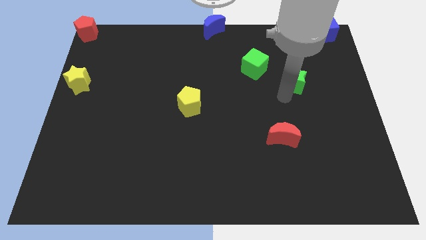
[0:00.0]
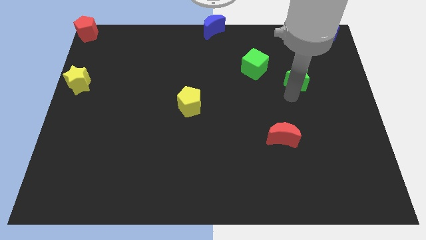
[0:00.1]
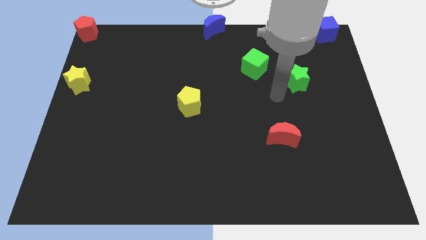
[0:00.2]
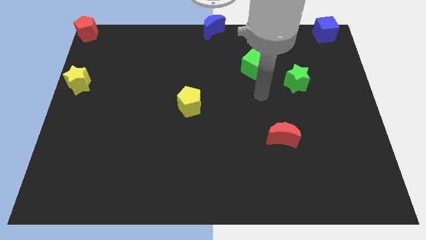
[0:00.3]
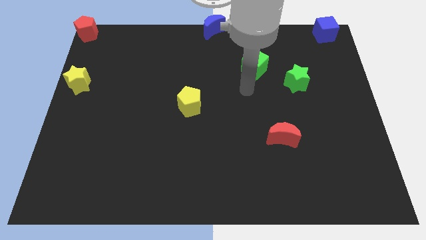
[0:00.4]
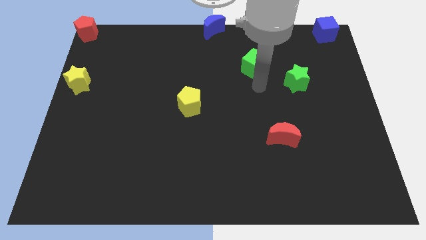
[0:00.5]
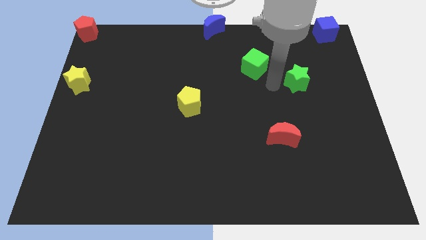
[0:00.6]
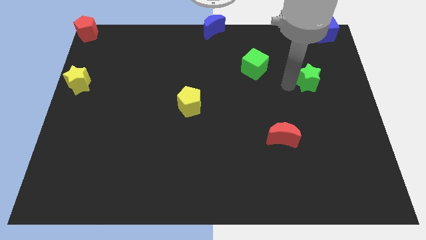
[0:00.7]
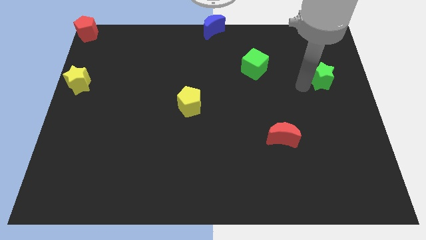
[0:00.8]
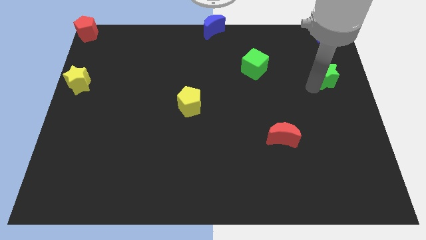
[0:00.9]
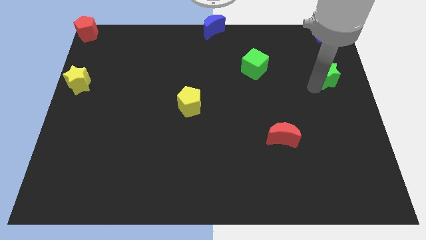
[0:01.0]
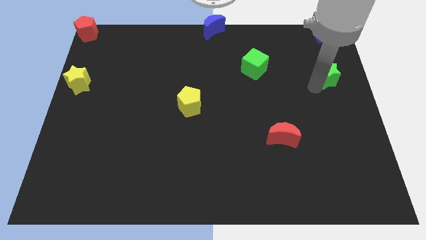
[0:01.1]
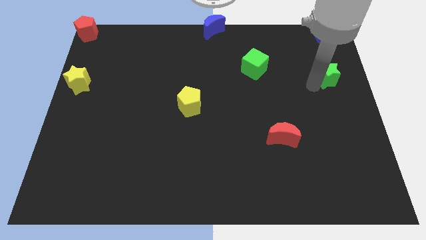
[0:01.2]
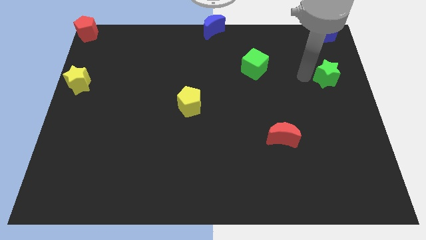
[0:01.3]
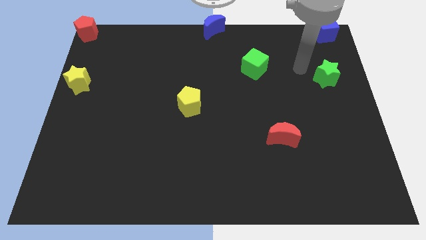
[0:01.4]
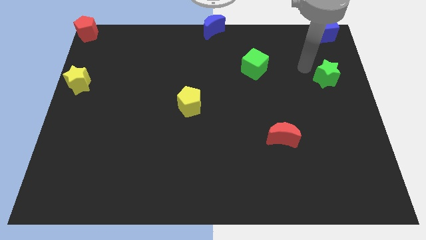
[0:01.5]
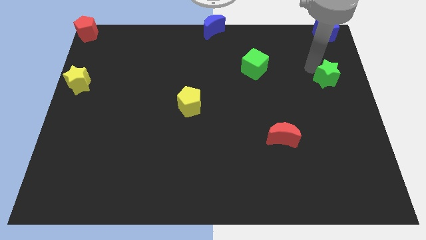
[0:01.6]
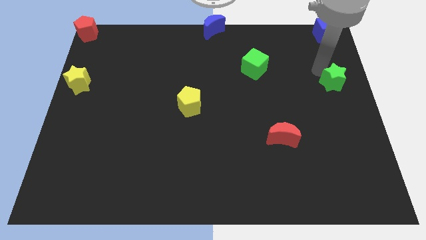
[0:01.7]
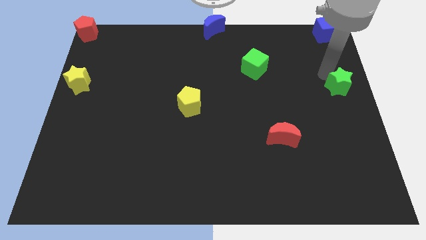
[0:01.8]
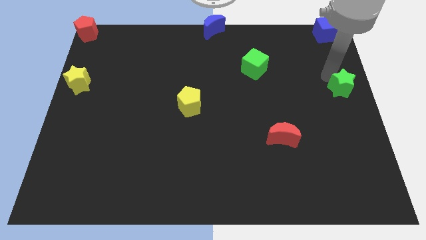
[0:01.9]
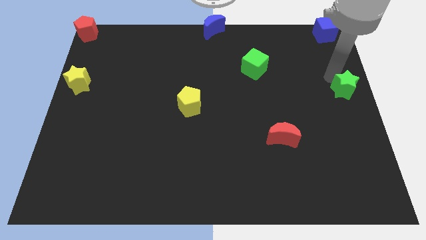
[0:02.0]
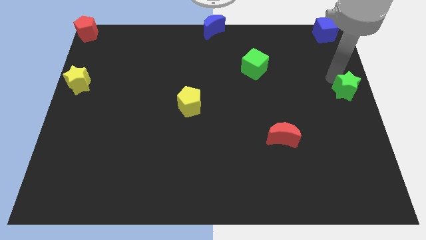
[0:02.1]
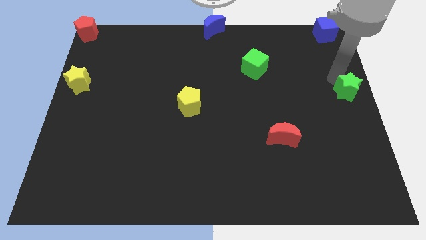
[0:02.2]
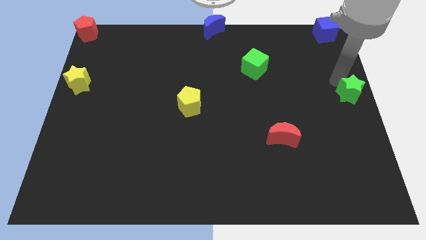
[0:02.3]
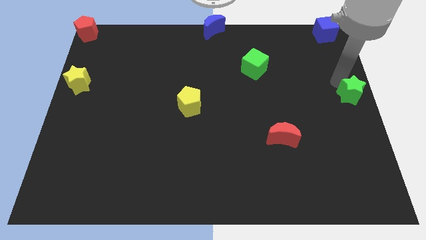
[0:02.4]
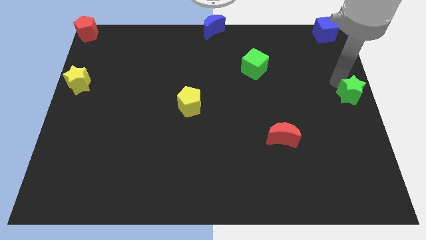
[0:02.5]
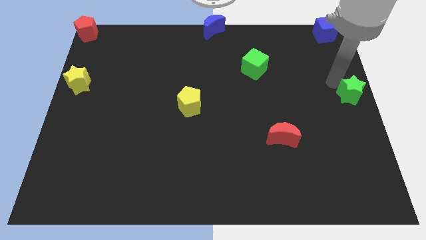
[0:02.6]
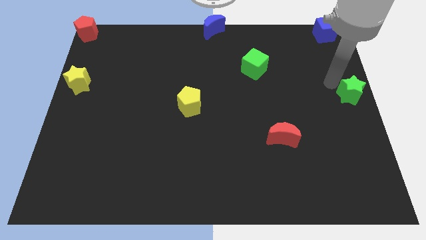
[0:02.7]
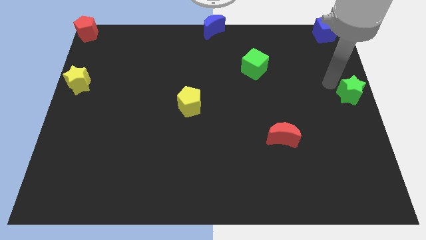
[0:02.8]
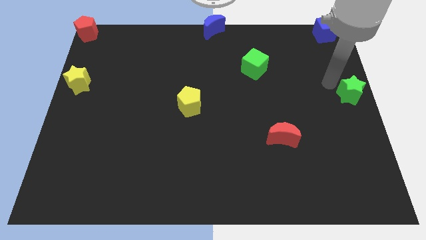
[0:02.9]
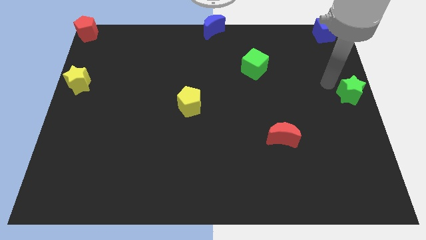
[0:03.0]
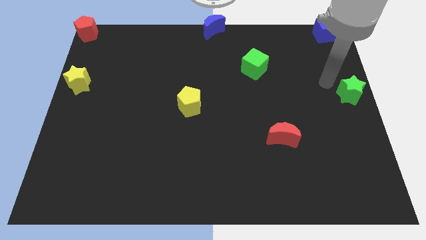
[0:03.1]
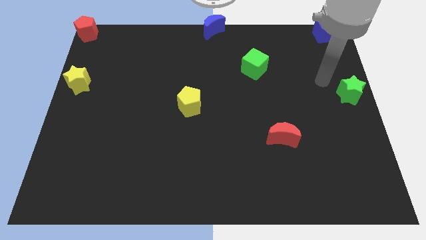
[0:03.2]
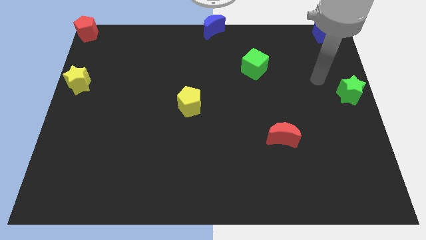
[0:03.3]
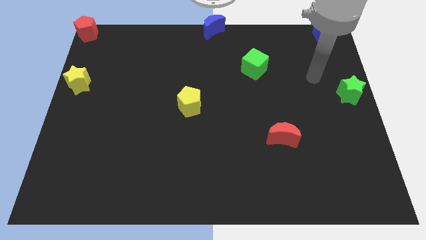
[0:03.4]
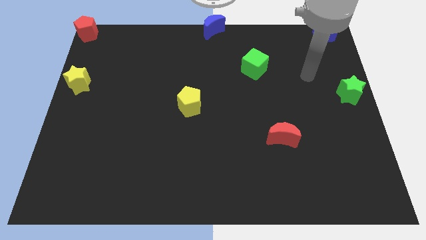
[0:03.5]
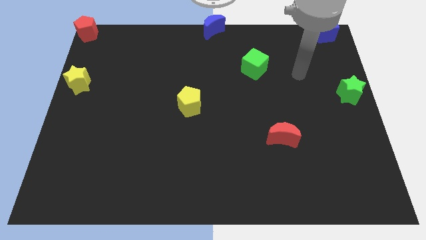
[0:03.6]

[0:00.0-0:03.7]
place the green star diagonally above the red crescent

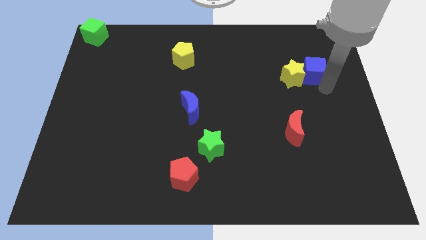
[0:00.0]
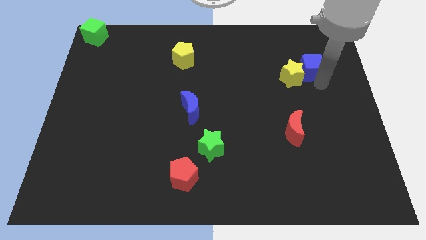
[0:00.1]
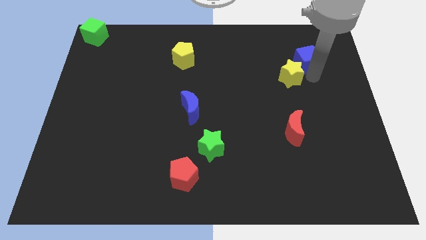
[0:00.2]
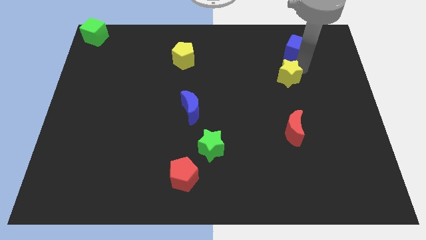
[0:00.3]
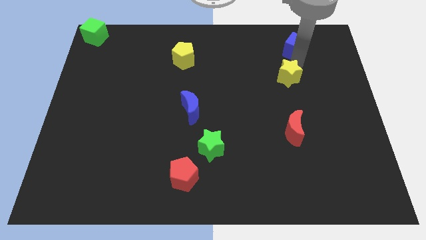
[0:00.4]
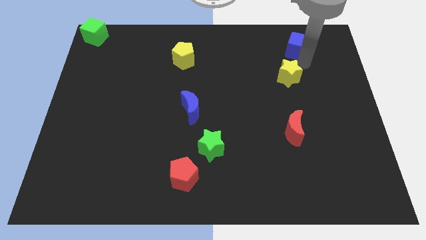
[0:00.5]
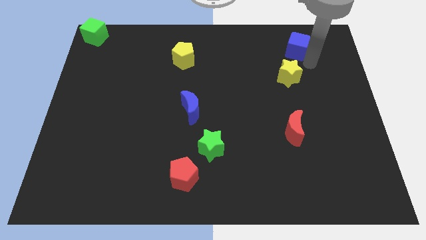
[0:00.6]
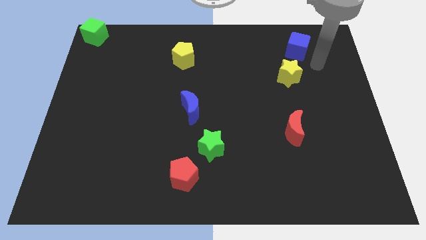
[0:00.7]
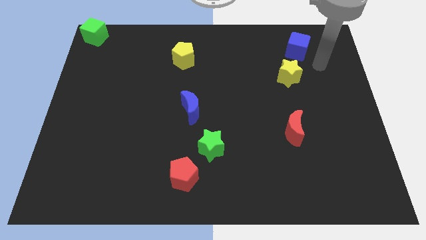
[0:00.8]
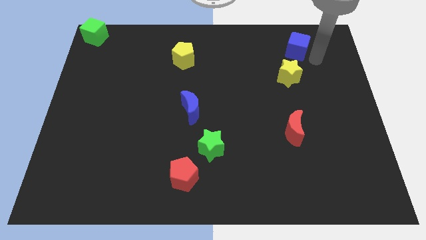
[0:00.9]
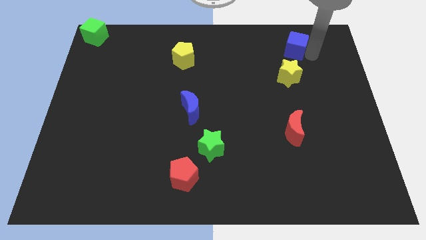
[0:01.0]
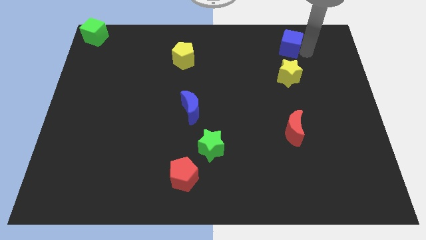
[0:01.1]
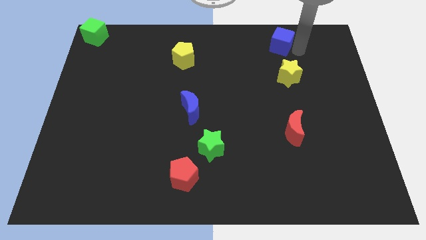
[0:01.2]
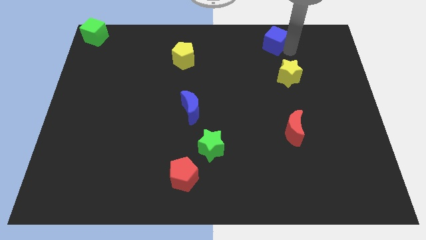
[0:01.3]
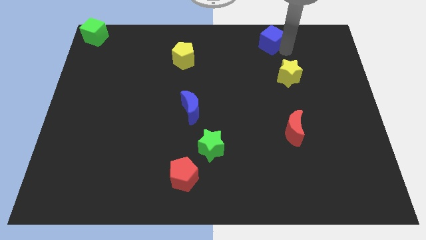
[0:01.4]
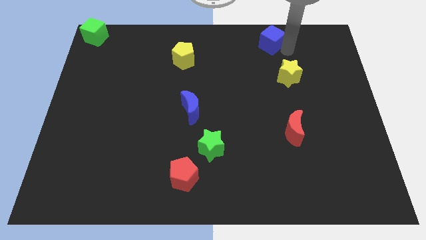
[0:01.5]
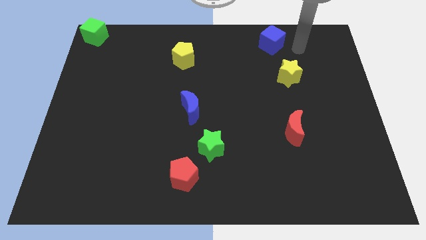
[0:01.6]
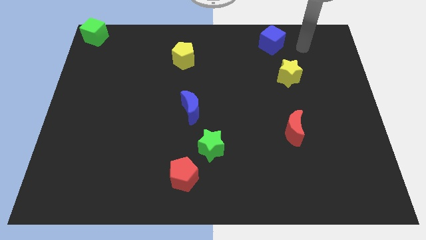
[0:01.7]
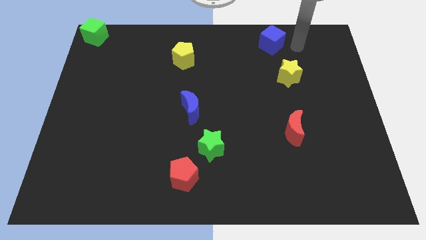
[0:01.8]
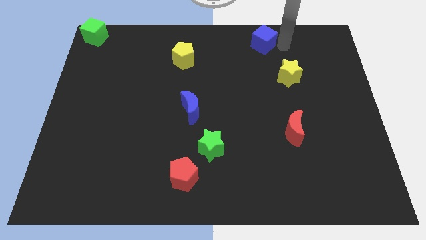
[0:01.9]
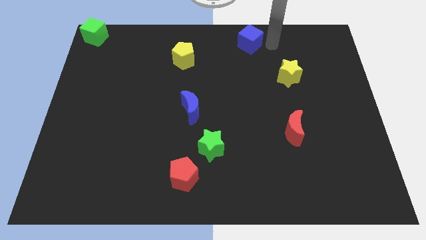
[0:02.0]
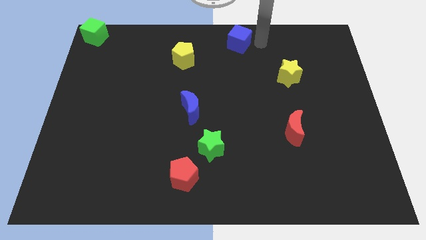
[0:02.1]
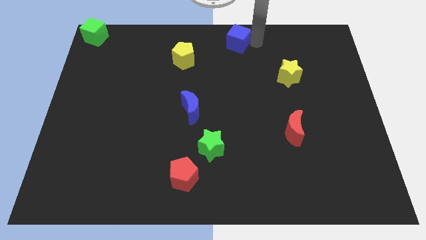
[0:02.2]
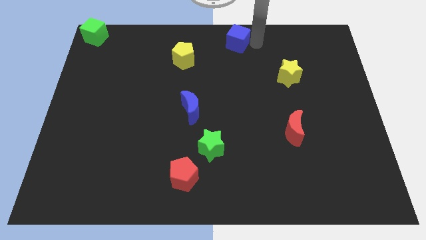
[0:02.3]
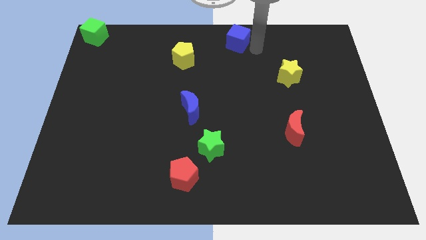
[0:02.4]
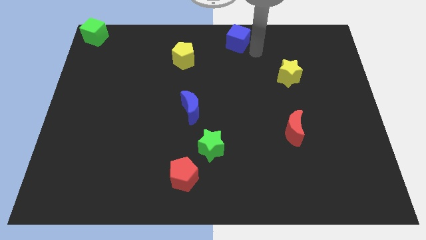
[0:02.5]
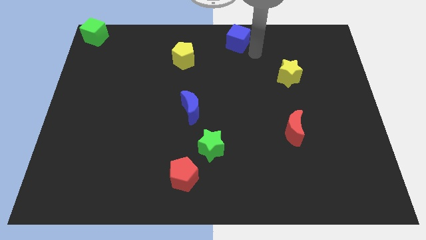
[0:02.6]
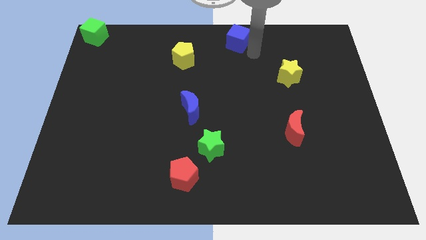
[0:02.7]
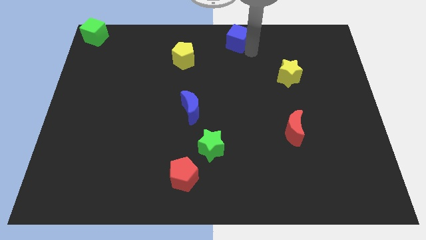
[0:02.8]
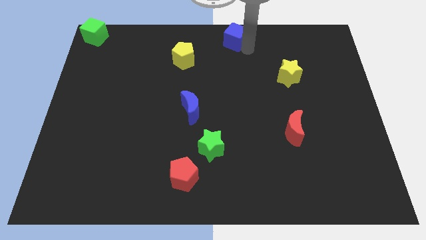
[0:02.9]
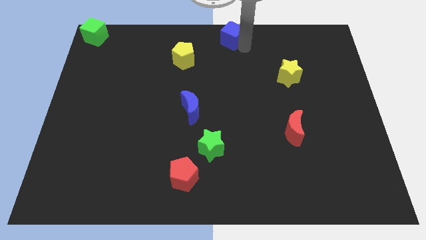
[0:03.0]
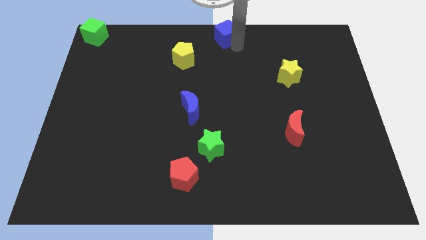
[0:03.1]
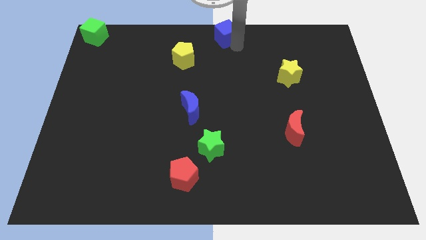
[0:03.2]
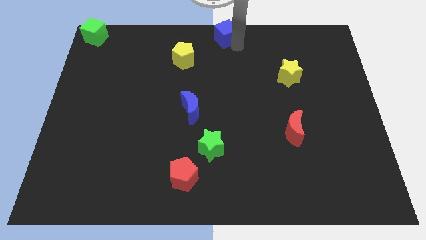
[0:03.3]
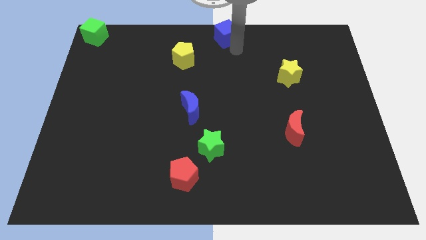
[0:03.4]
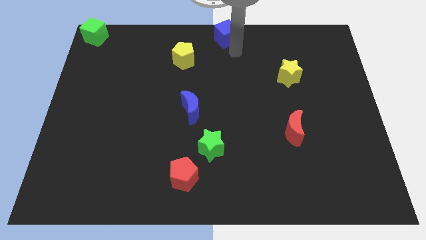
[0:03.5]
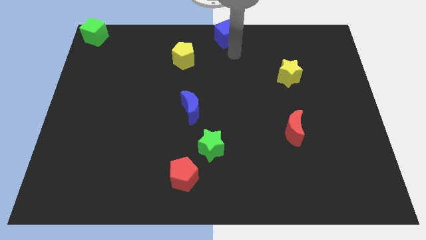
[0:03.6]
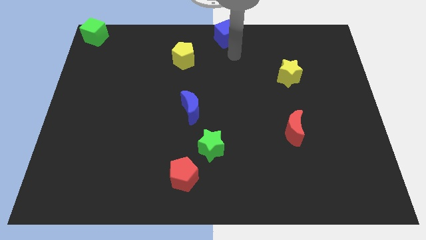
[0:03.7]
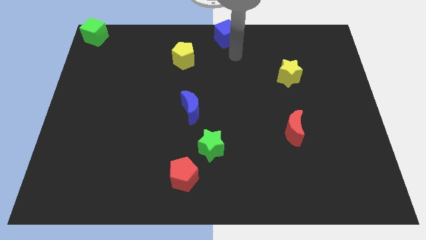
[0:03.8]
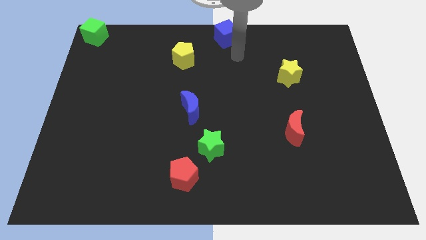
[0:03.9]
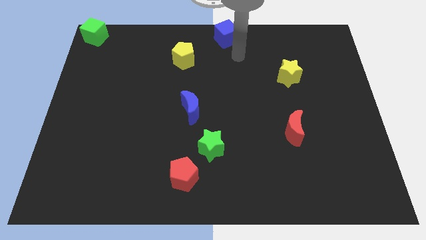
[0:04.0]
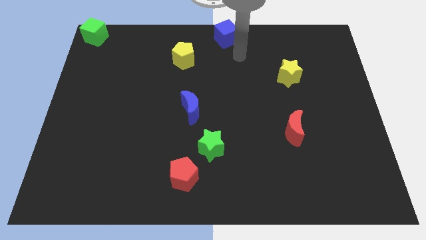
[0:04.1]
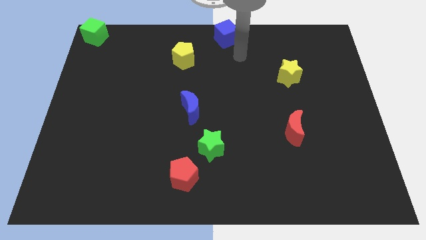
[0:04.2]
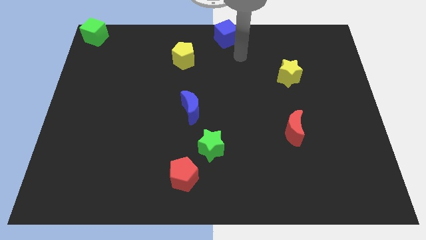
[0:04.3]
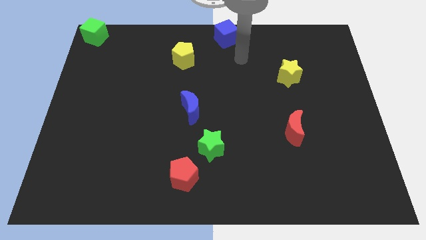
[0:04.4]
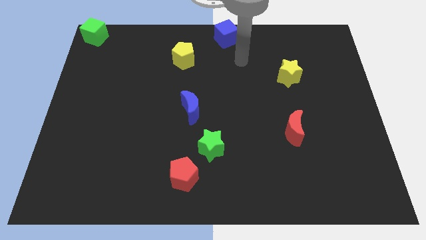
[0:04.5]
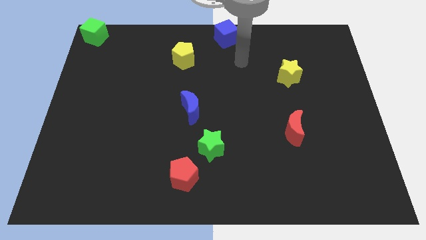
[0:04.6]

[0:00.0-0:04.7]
place the blue cube towards the top right side of the yellow pentagon

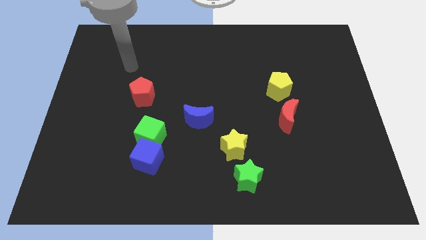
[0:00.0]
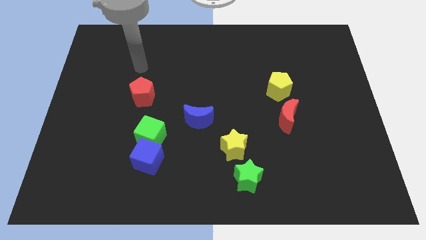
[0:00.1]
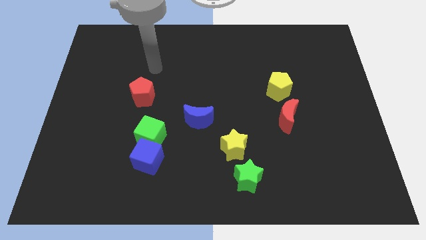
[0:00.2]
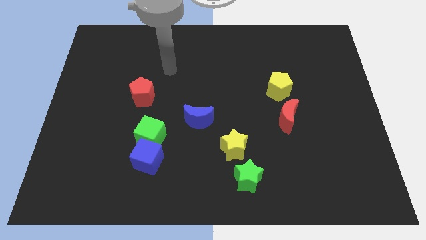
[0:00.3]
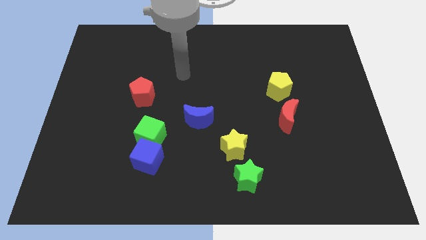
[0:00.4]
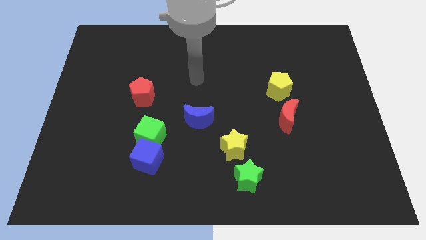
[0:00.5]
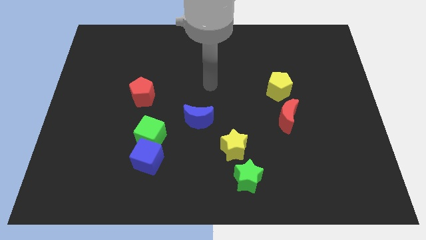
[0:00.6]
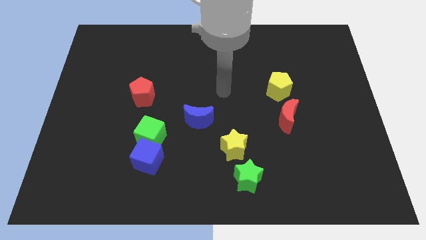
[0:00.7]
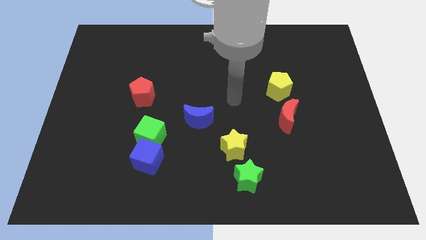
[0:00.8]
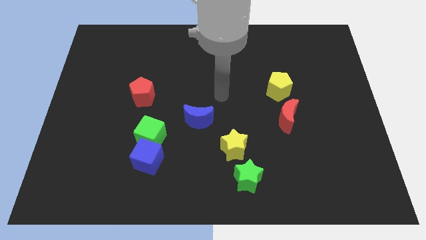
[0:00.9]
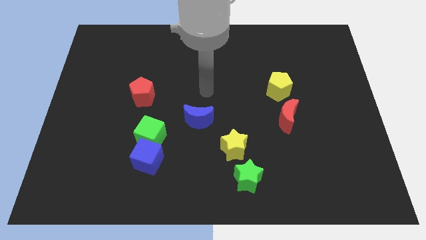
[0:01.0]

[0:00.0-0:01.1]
point your arm at the top of the blue crescent
